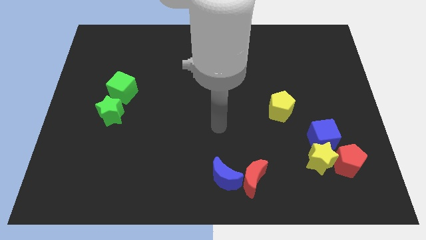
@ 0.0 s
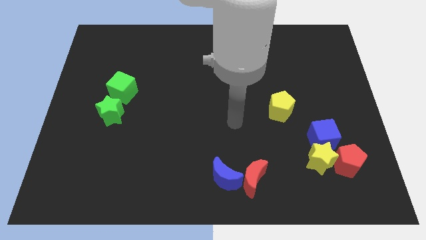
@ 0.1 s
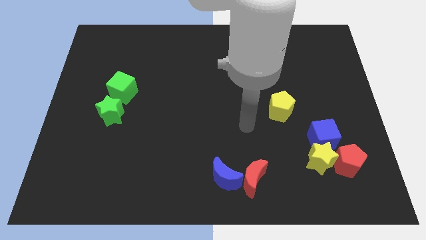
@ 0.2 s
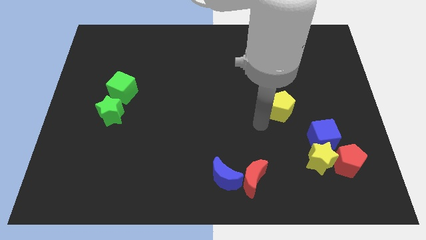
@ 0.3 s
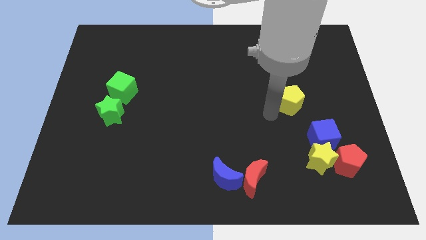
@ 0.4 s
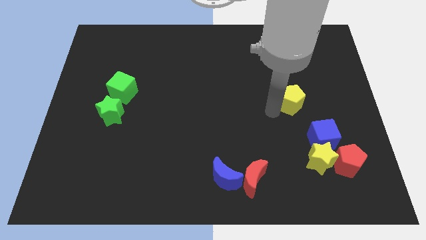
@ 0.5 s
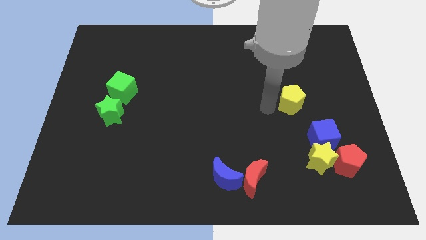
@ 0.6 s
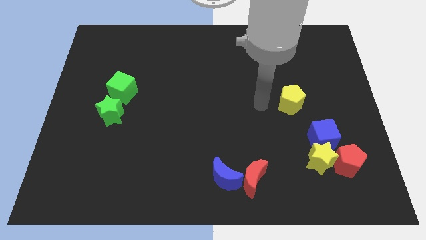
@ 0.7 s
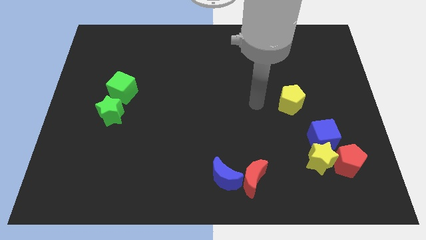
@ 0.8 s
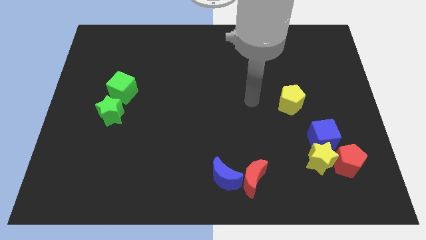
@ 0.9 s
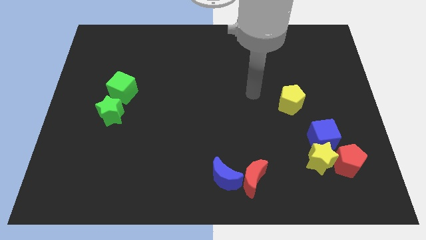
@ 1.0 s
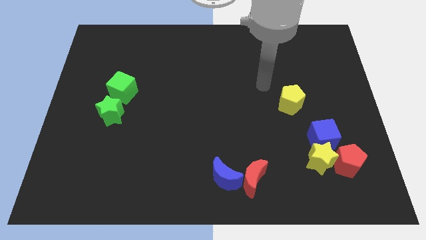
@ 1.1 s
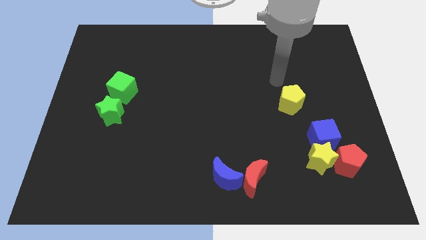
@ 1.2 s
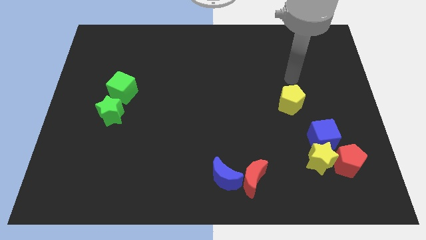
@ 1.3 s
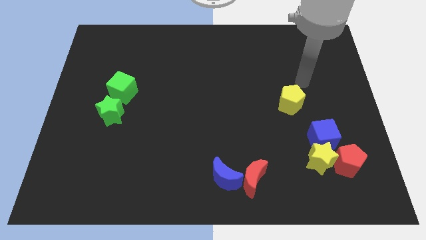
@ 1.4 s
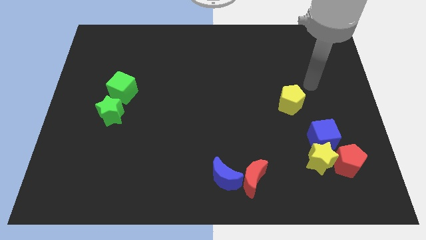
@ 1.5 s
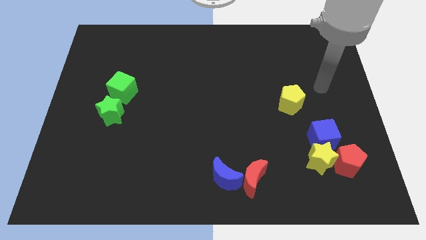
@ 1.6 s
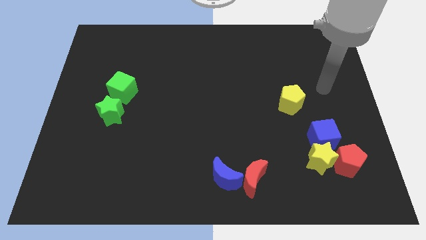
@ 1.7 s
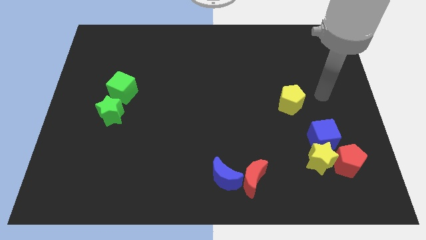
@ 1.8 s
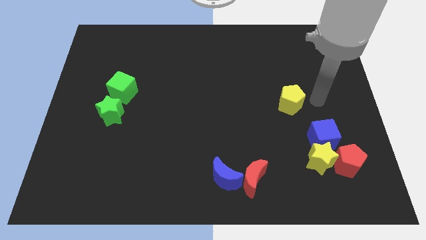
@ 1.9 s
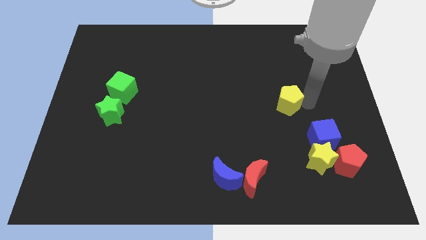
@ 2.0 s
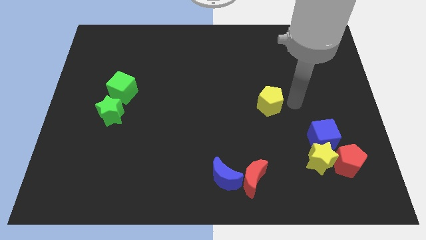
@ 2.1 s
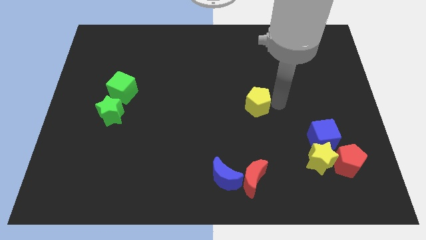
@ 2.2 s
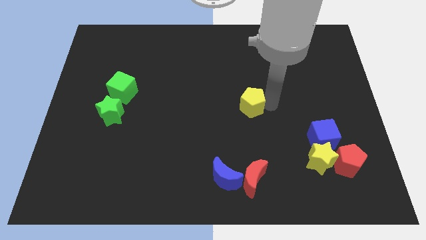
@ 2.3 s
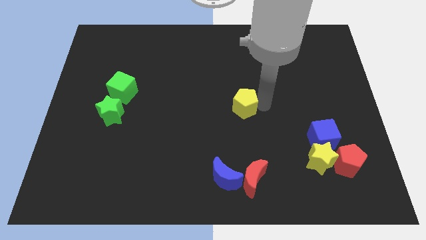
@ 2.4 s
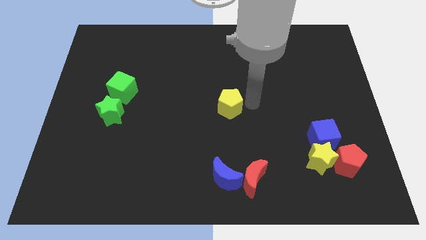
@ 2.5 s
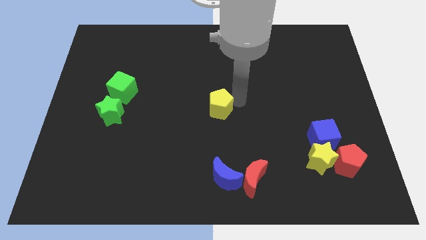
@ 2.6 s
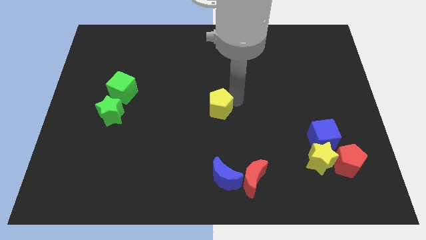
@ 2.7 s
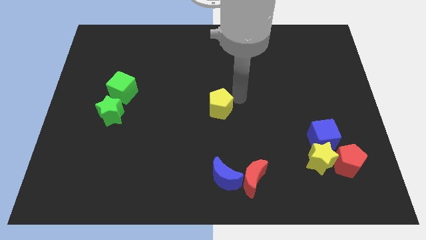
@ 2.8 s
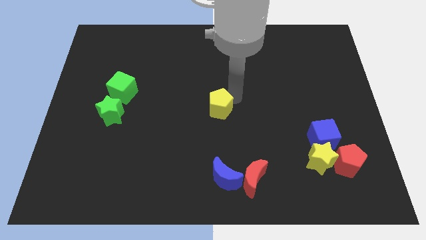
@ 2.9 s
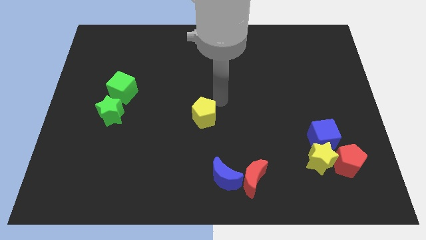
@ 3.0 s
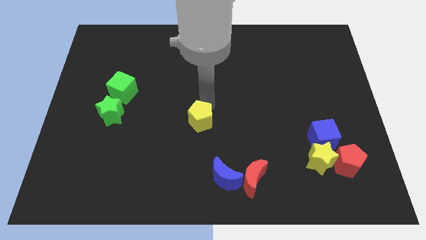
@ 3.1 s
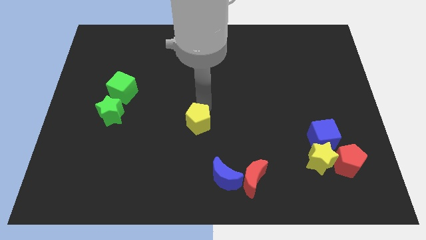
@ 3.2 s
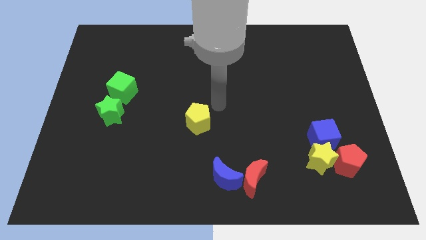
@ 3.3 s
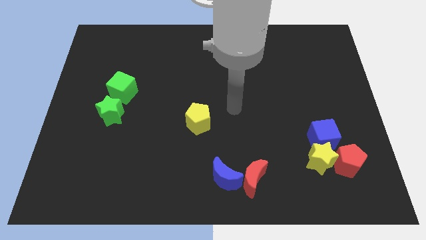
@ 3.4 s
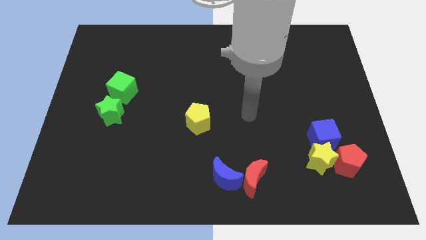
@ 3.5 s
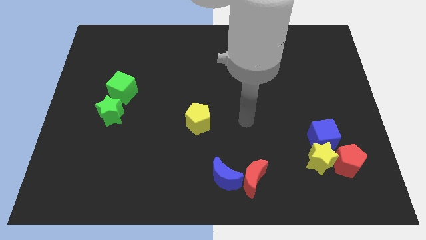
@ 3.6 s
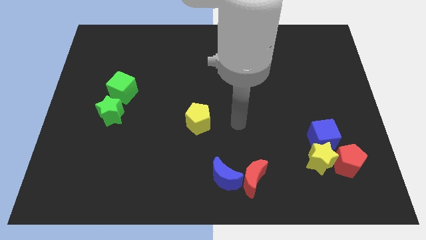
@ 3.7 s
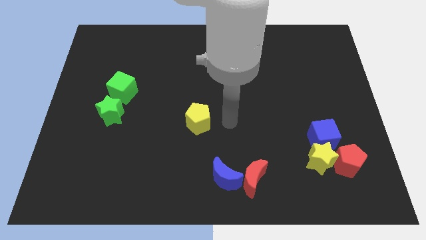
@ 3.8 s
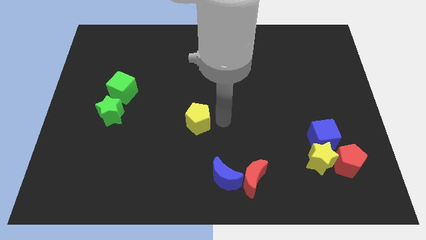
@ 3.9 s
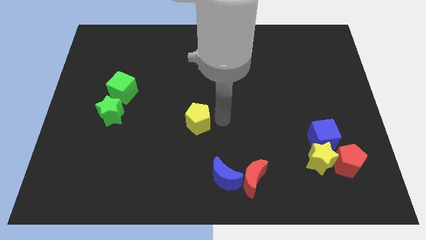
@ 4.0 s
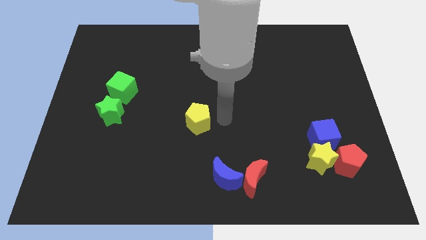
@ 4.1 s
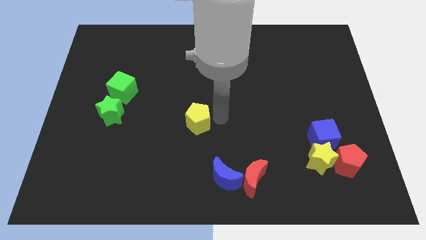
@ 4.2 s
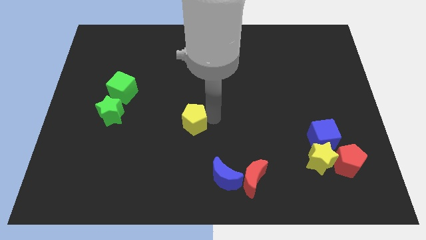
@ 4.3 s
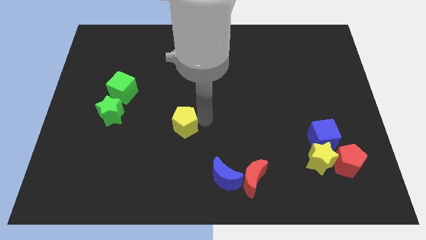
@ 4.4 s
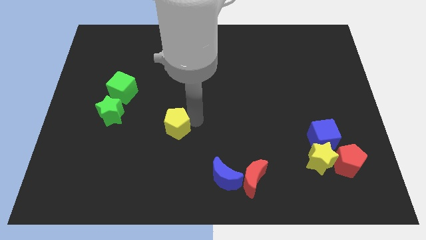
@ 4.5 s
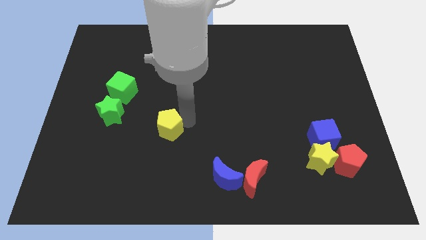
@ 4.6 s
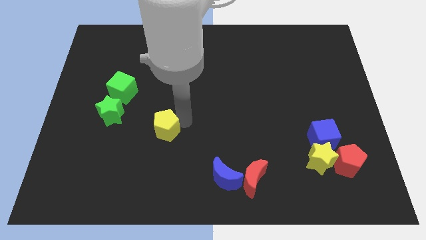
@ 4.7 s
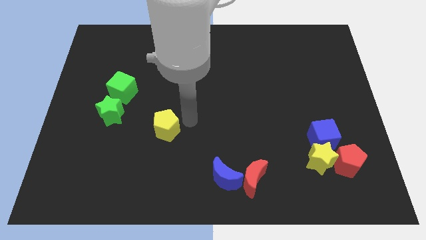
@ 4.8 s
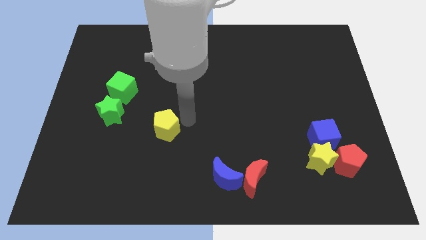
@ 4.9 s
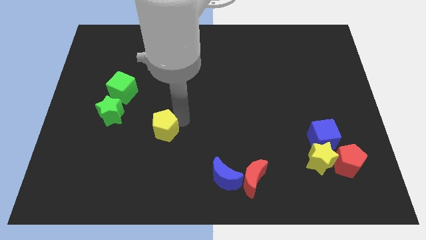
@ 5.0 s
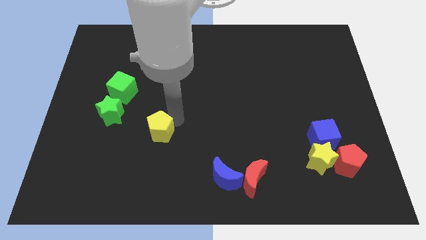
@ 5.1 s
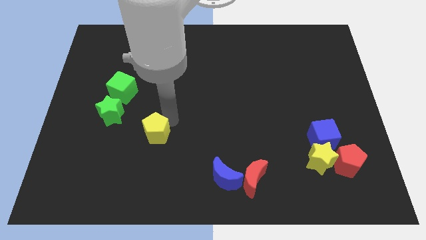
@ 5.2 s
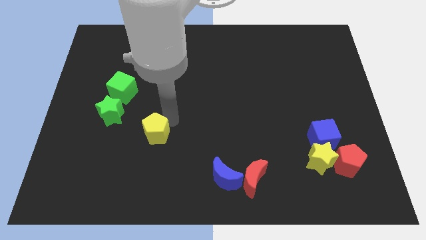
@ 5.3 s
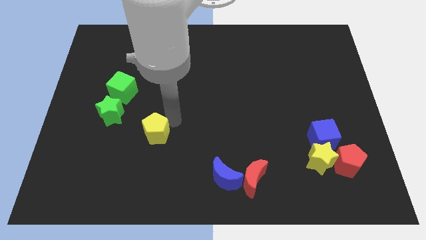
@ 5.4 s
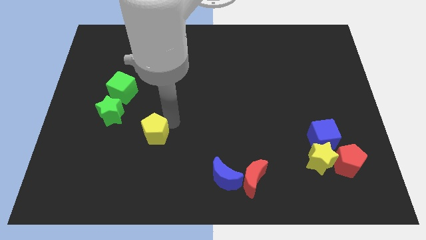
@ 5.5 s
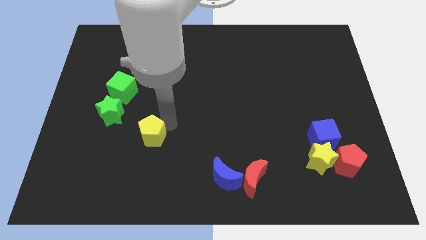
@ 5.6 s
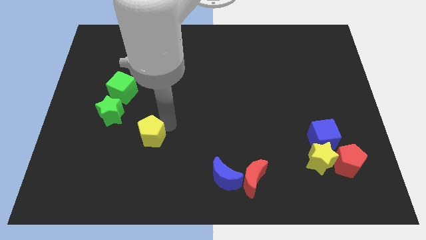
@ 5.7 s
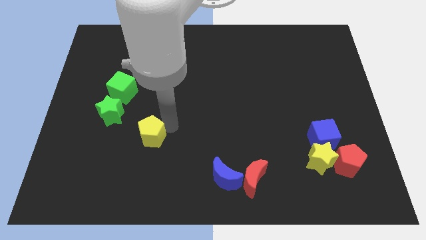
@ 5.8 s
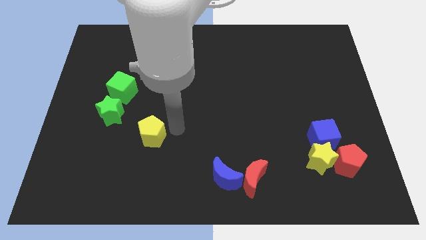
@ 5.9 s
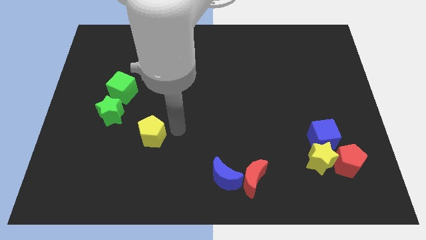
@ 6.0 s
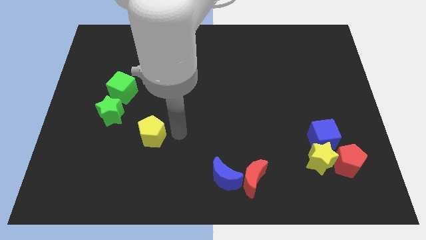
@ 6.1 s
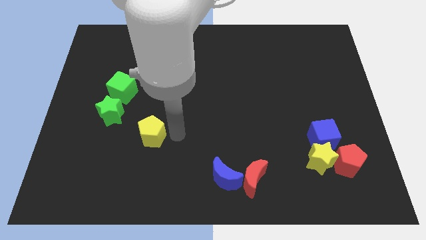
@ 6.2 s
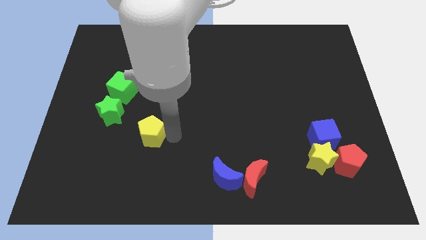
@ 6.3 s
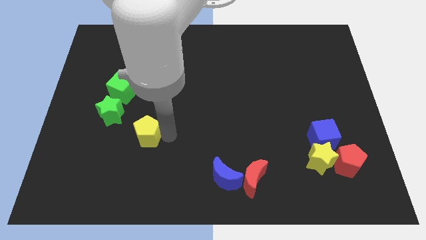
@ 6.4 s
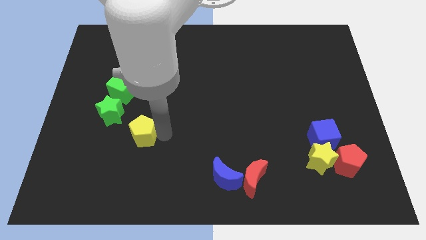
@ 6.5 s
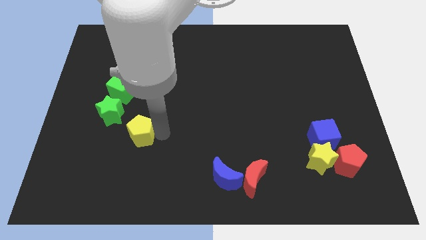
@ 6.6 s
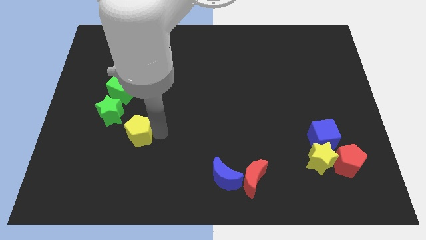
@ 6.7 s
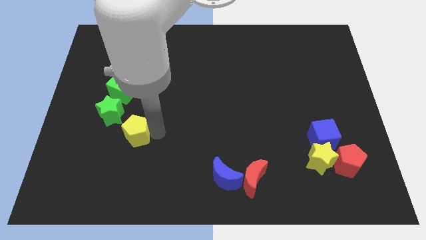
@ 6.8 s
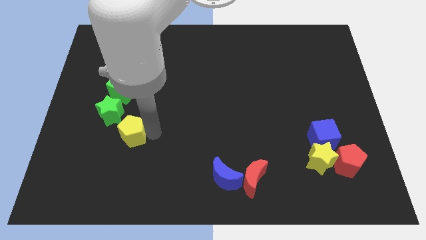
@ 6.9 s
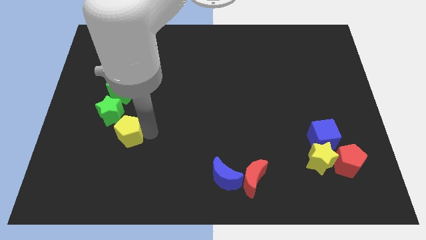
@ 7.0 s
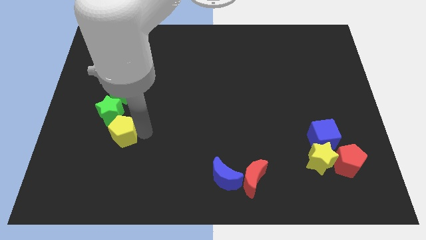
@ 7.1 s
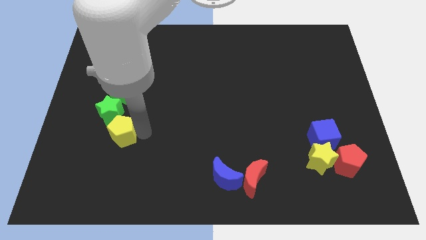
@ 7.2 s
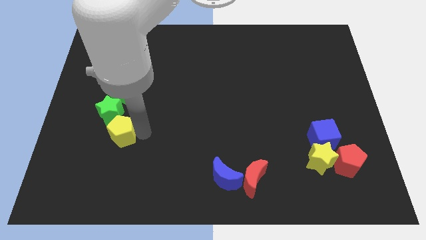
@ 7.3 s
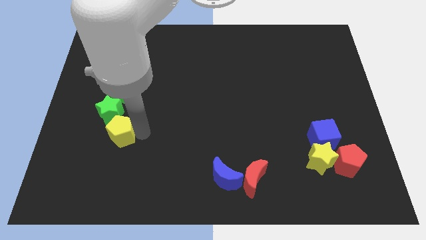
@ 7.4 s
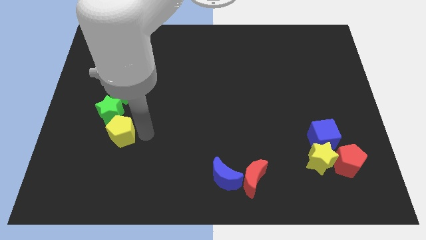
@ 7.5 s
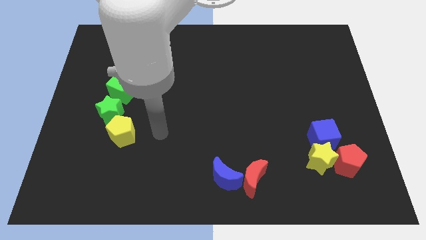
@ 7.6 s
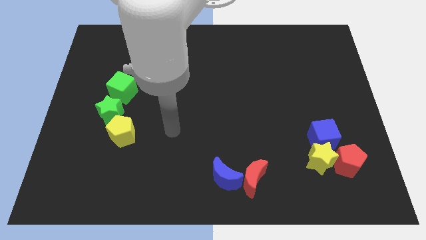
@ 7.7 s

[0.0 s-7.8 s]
push the yellow pentagon close to the green star

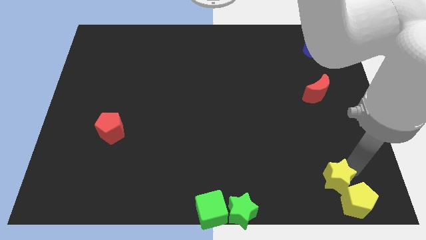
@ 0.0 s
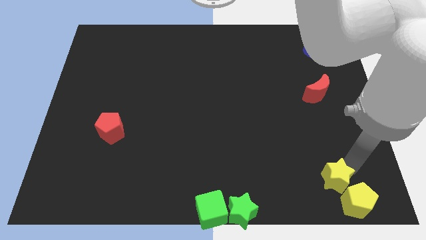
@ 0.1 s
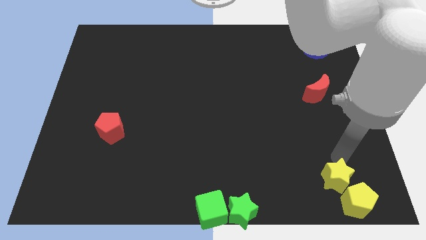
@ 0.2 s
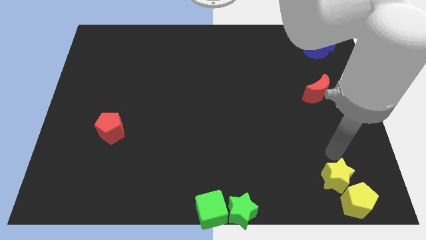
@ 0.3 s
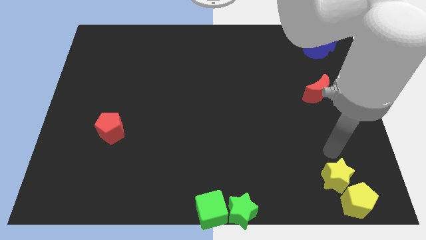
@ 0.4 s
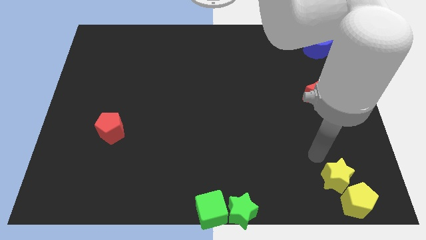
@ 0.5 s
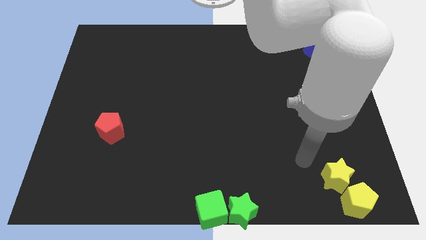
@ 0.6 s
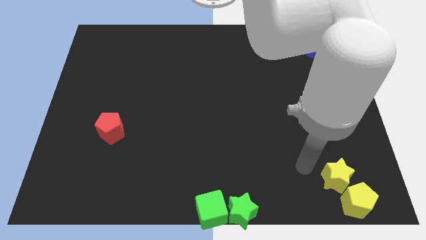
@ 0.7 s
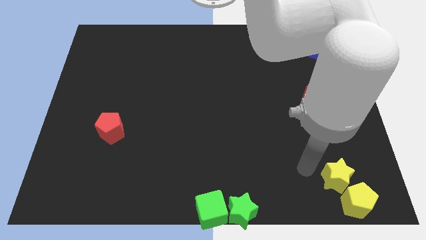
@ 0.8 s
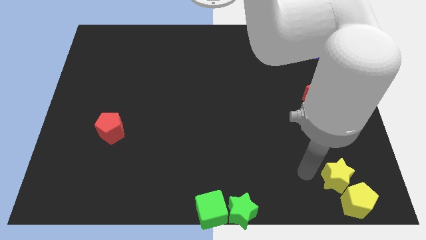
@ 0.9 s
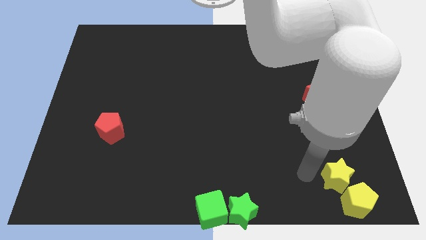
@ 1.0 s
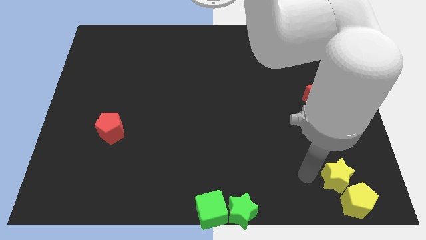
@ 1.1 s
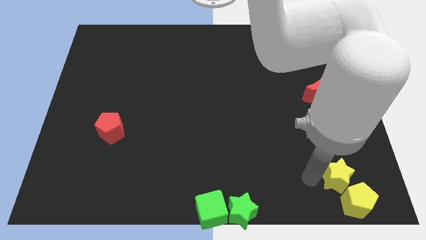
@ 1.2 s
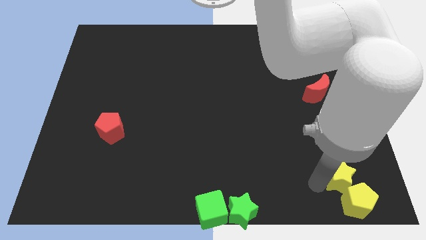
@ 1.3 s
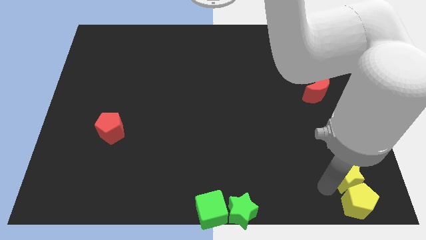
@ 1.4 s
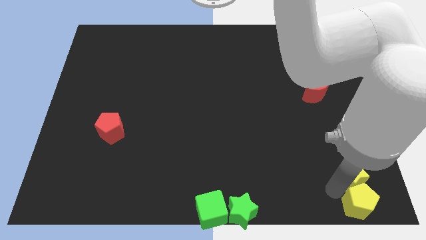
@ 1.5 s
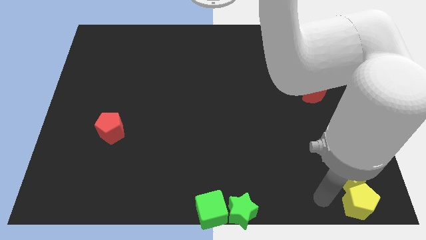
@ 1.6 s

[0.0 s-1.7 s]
place the yellow blocks at bottom right corner of the board
